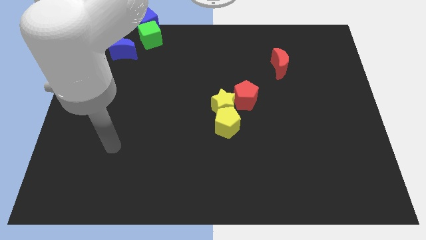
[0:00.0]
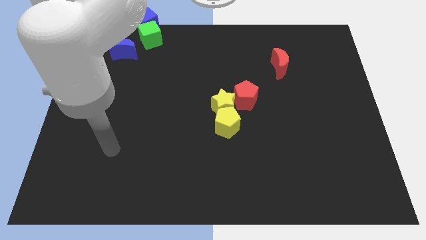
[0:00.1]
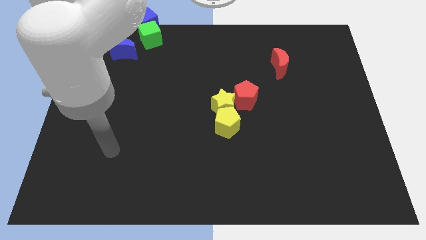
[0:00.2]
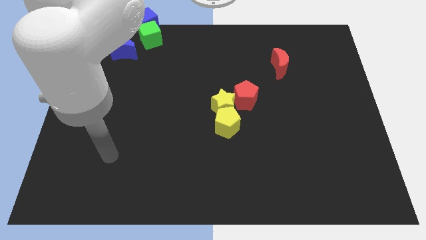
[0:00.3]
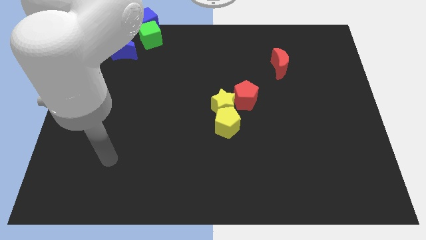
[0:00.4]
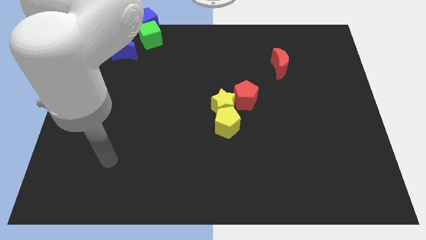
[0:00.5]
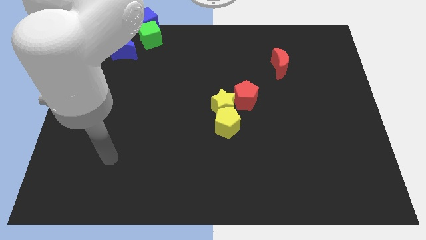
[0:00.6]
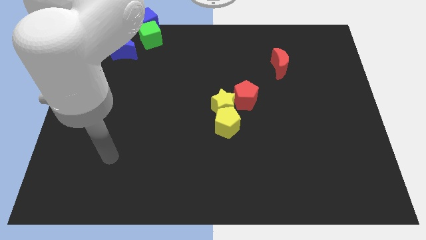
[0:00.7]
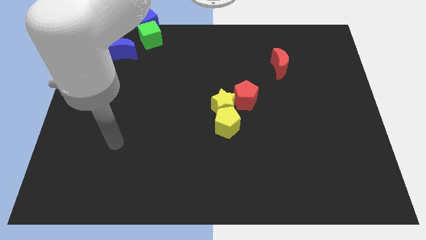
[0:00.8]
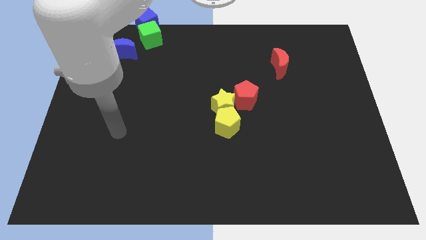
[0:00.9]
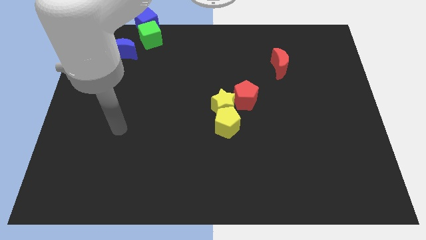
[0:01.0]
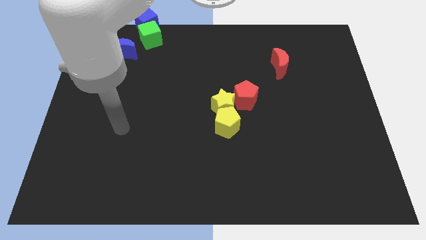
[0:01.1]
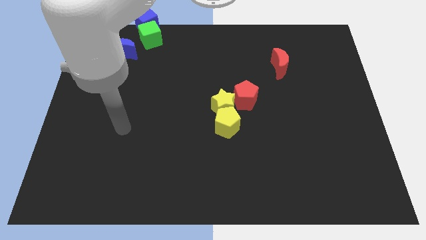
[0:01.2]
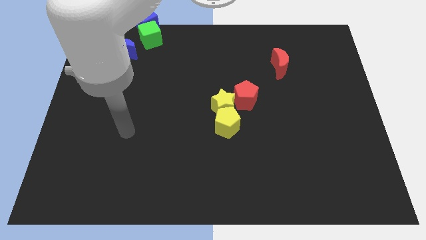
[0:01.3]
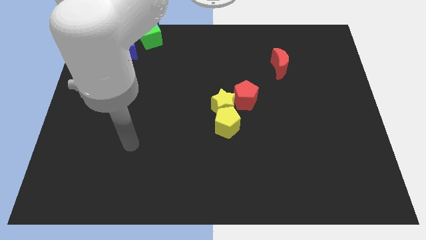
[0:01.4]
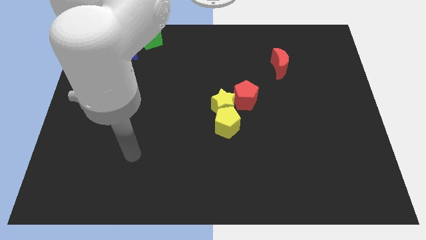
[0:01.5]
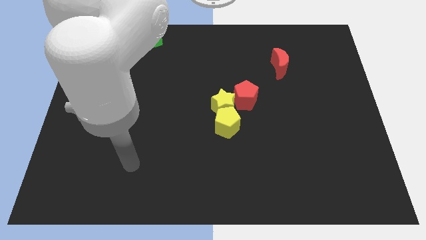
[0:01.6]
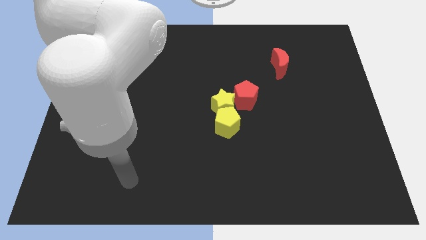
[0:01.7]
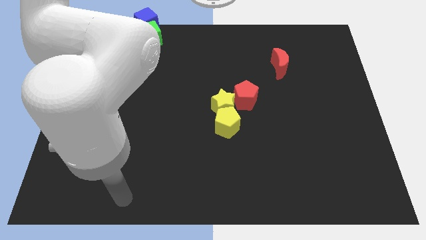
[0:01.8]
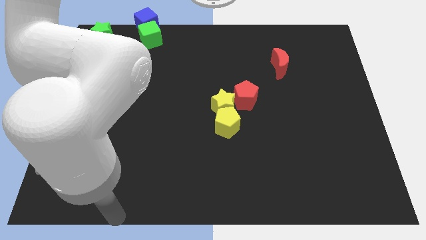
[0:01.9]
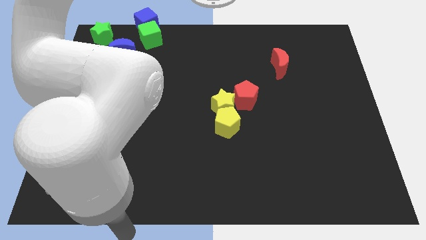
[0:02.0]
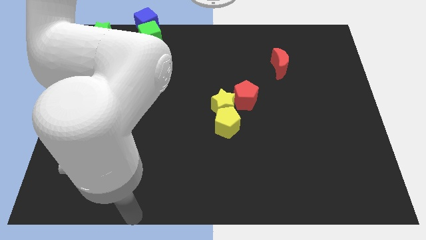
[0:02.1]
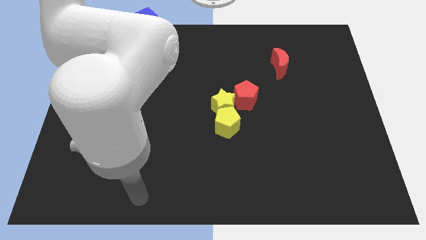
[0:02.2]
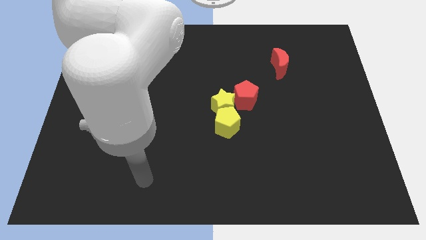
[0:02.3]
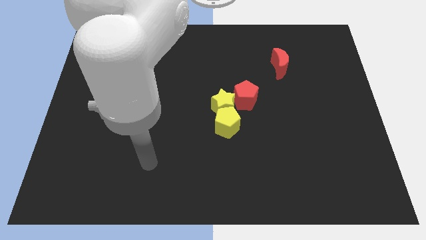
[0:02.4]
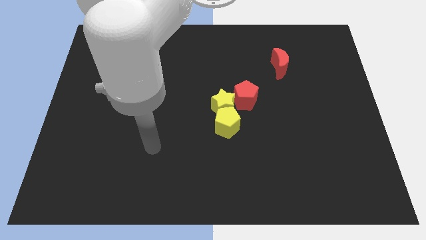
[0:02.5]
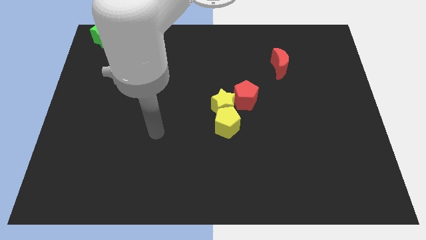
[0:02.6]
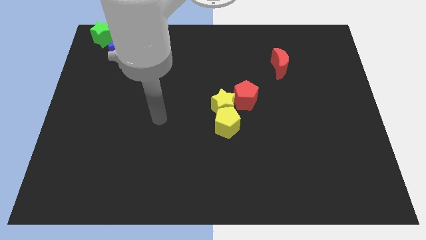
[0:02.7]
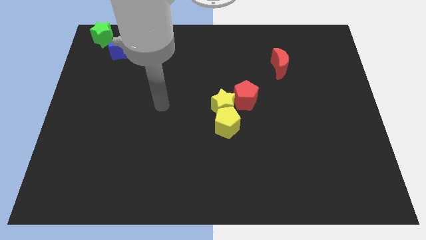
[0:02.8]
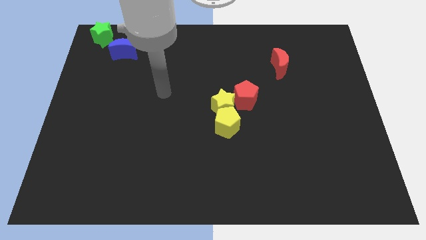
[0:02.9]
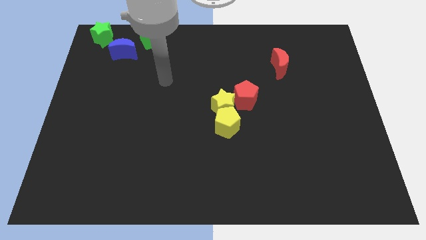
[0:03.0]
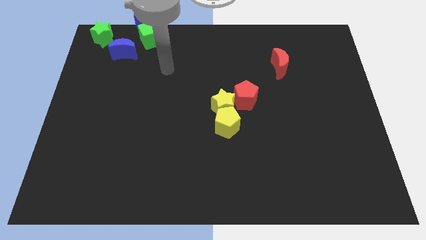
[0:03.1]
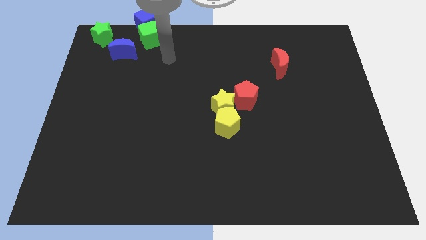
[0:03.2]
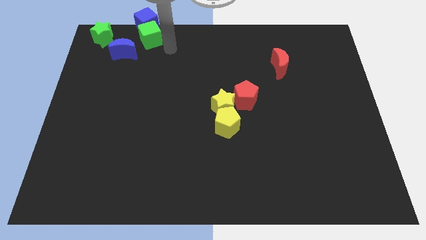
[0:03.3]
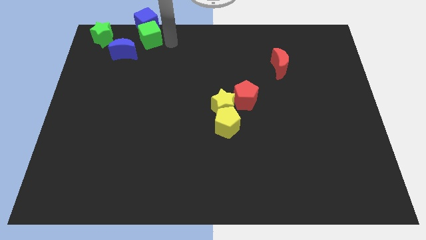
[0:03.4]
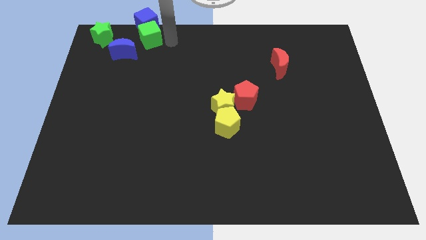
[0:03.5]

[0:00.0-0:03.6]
move your arm towards the green cube

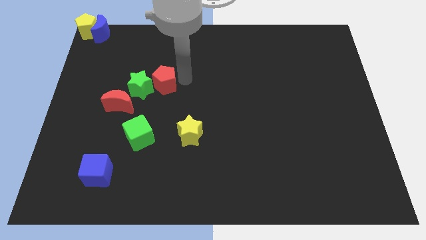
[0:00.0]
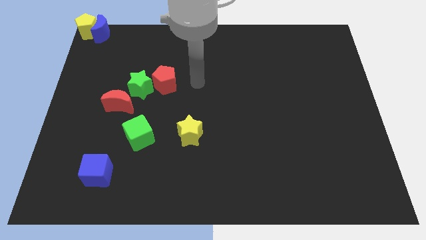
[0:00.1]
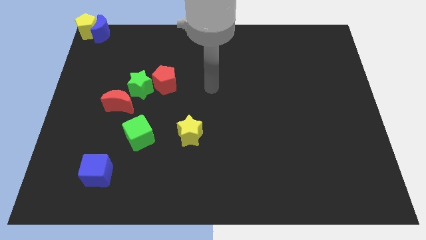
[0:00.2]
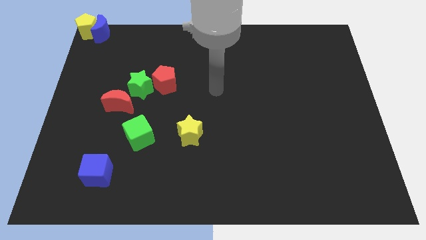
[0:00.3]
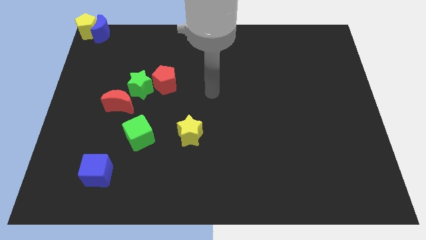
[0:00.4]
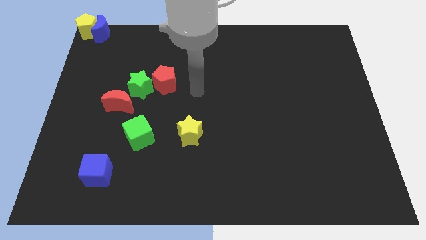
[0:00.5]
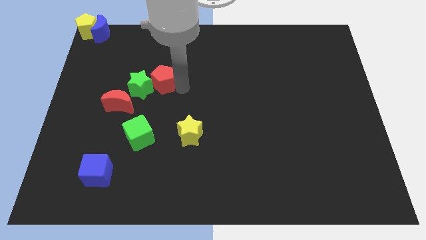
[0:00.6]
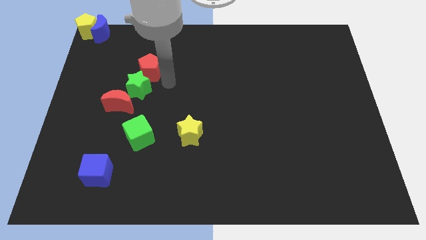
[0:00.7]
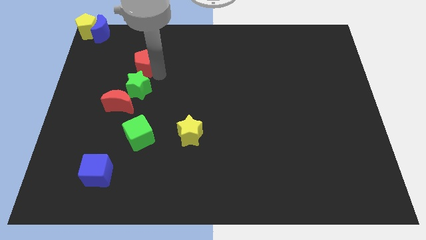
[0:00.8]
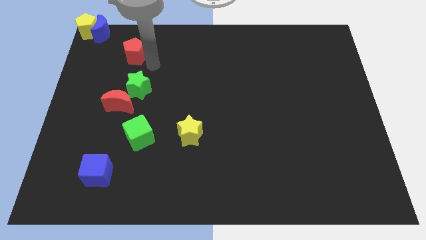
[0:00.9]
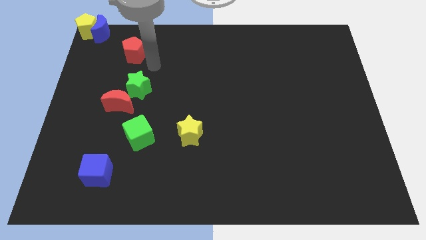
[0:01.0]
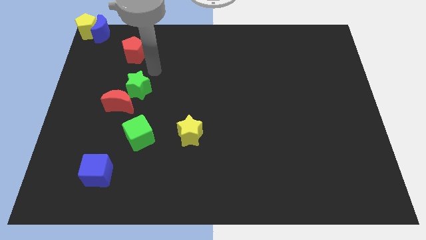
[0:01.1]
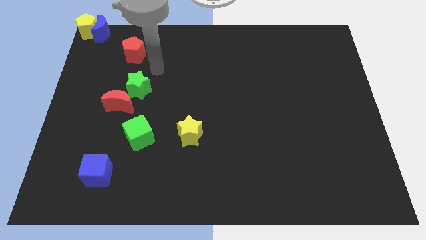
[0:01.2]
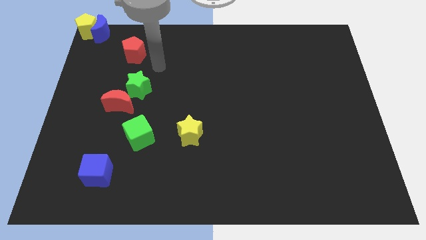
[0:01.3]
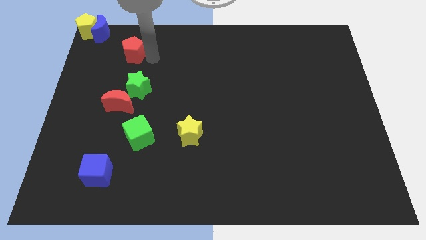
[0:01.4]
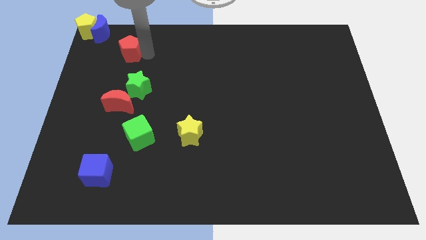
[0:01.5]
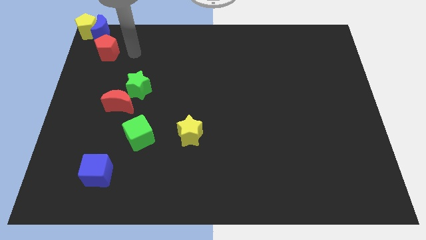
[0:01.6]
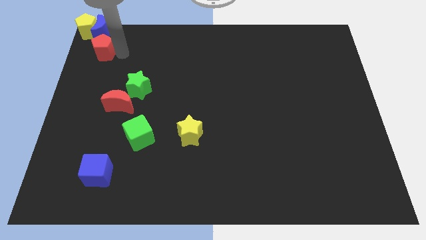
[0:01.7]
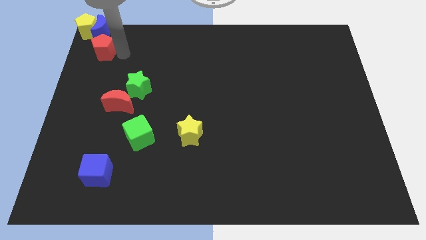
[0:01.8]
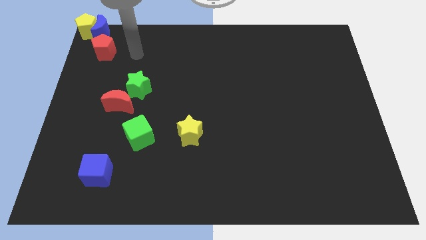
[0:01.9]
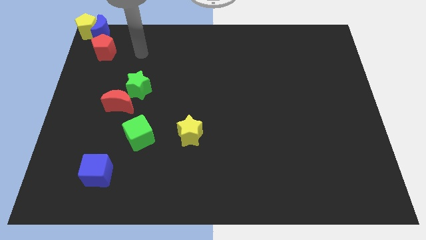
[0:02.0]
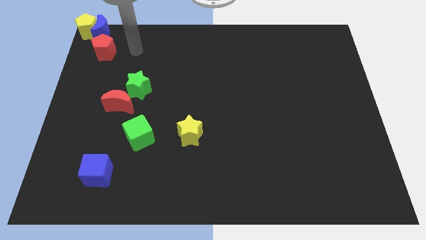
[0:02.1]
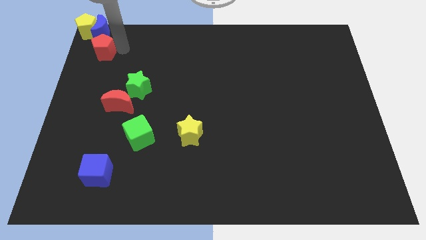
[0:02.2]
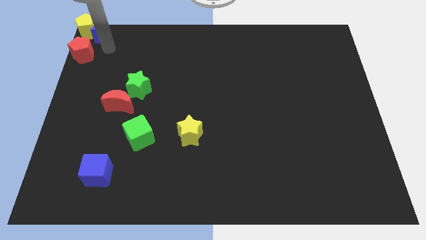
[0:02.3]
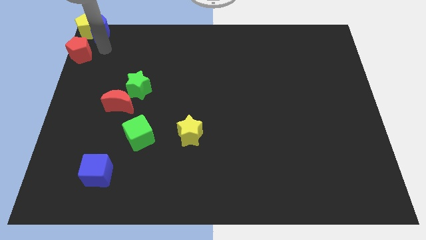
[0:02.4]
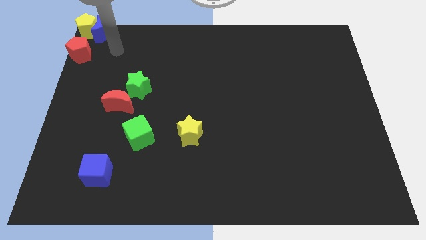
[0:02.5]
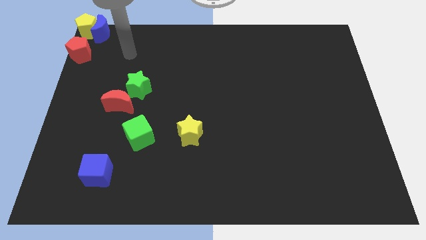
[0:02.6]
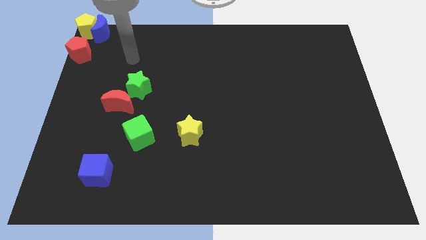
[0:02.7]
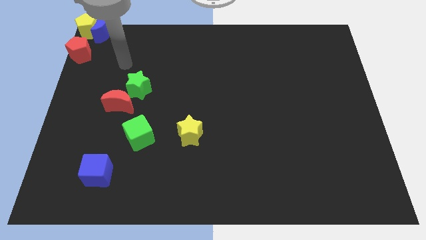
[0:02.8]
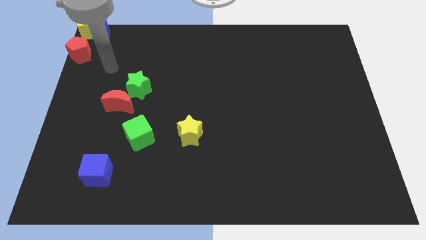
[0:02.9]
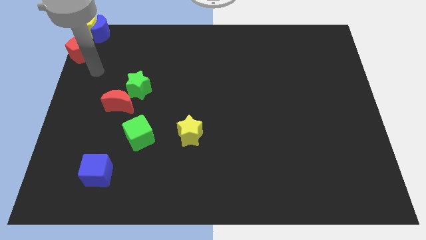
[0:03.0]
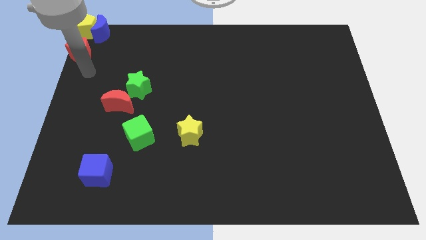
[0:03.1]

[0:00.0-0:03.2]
move the red pentagon below the yellow pentagon

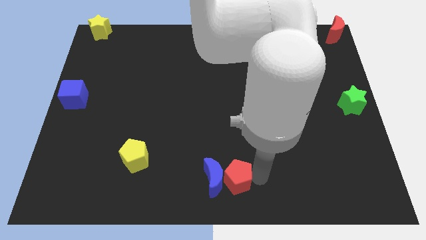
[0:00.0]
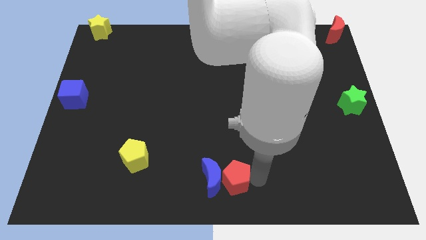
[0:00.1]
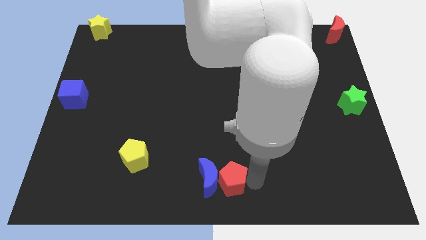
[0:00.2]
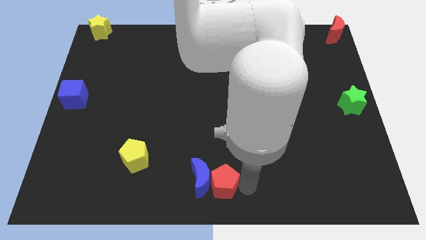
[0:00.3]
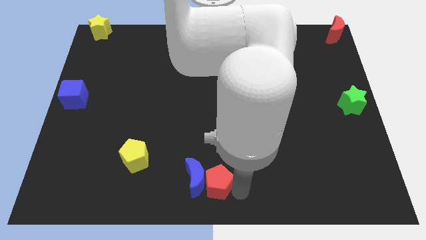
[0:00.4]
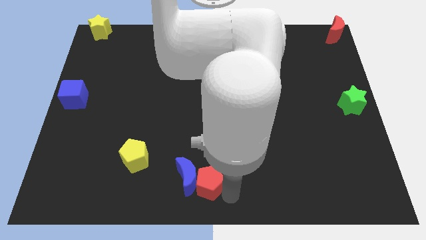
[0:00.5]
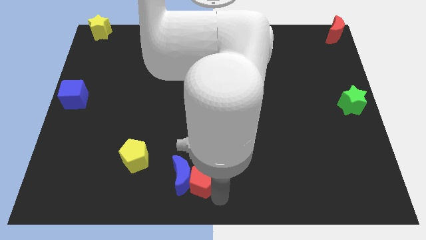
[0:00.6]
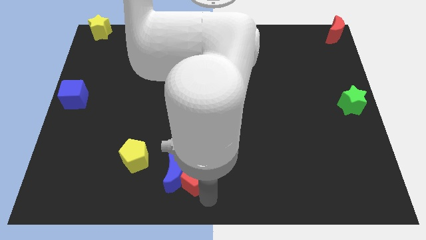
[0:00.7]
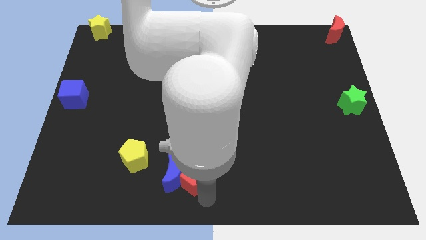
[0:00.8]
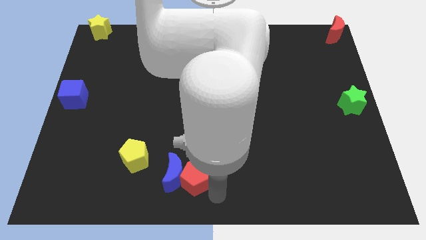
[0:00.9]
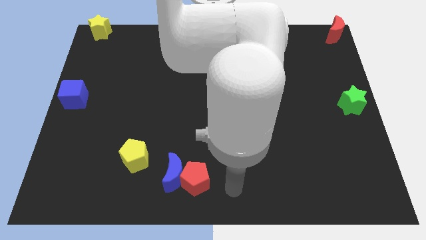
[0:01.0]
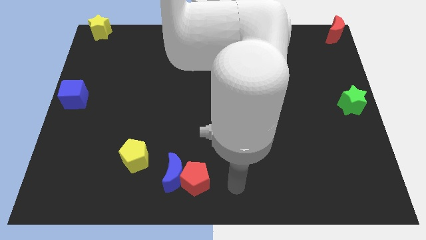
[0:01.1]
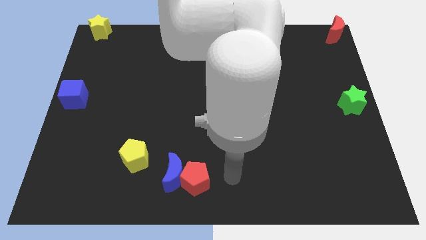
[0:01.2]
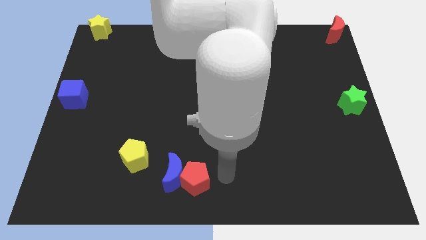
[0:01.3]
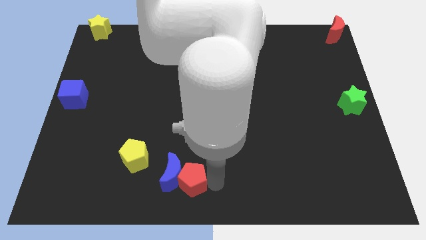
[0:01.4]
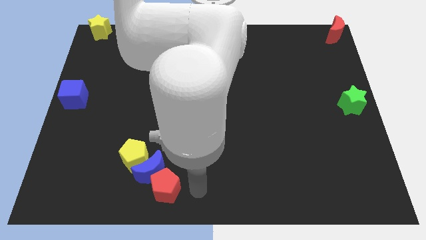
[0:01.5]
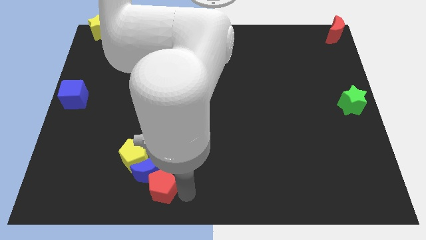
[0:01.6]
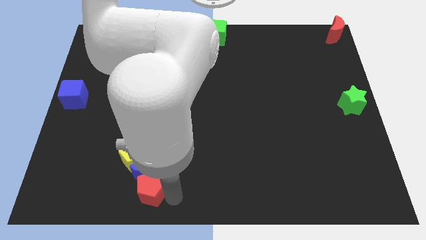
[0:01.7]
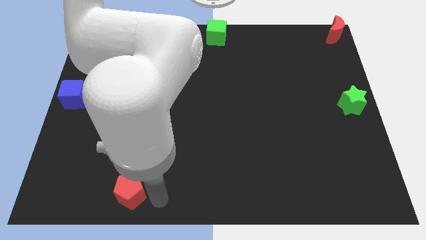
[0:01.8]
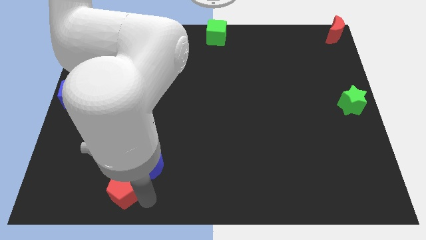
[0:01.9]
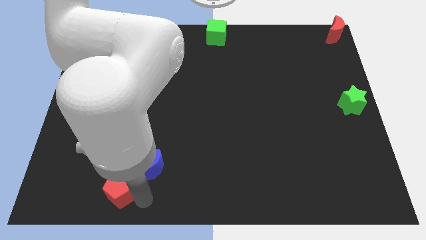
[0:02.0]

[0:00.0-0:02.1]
move the red pentagon and the blue moon towards left side of the board

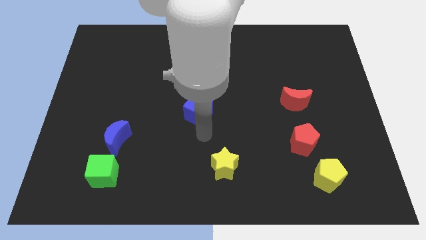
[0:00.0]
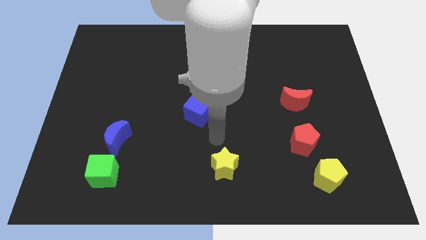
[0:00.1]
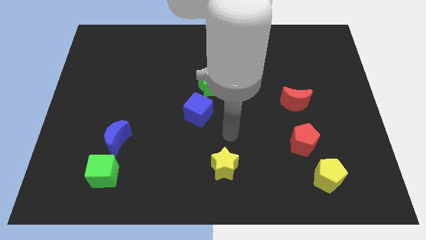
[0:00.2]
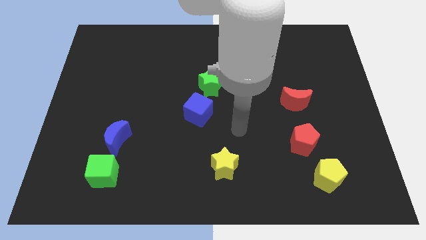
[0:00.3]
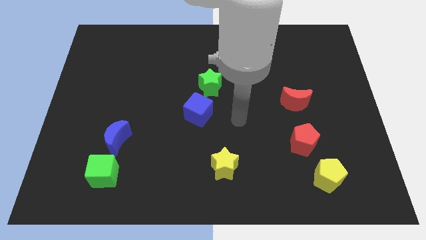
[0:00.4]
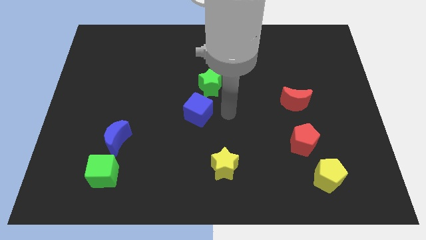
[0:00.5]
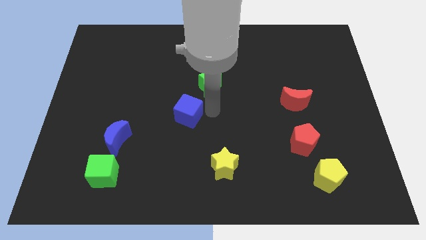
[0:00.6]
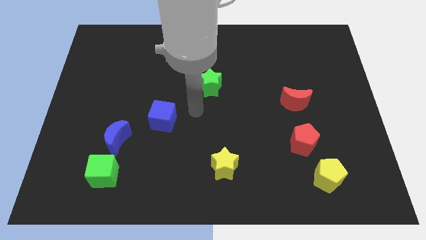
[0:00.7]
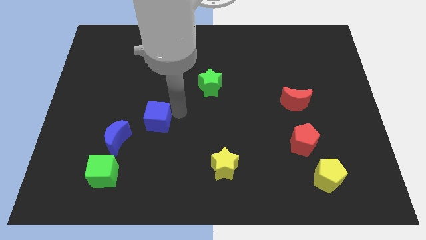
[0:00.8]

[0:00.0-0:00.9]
push blue cube towards blue crescent
